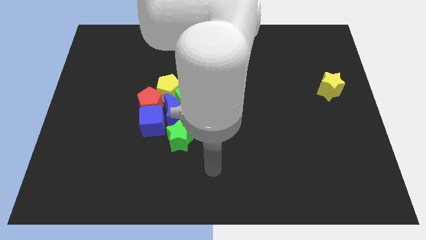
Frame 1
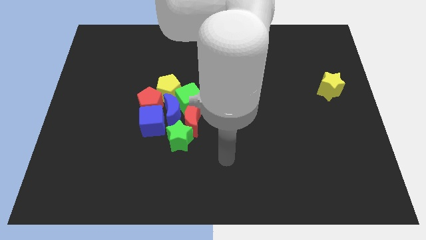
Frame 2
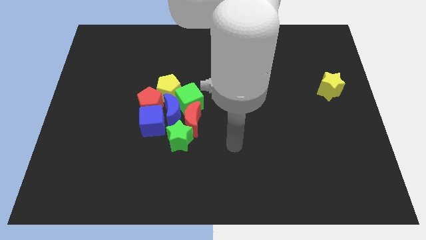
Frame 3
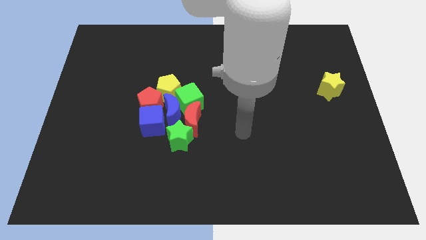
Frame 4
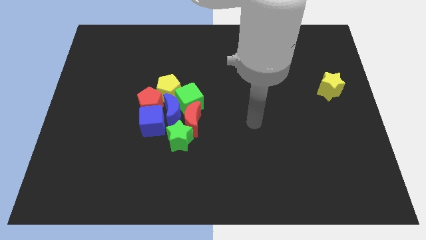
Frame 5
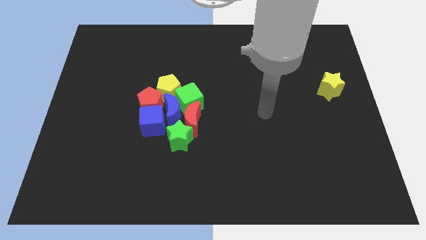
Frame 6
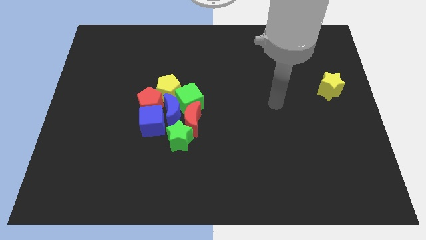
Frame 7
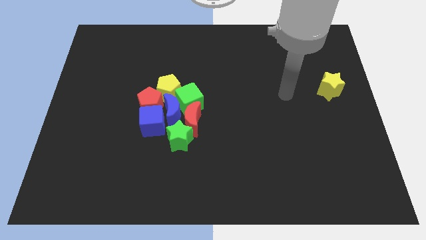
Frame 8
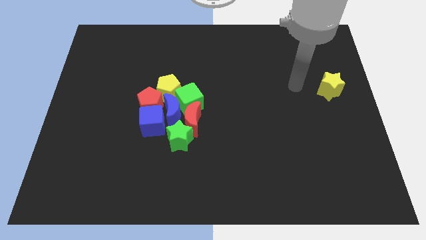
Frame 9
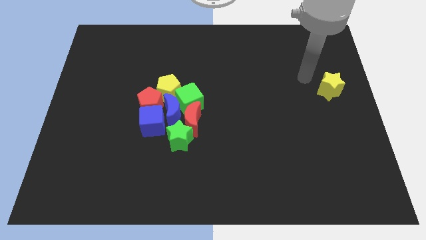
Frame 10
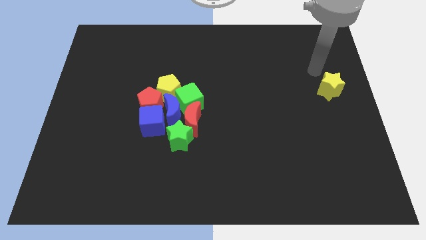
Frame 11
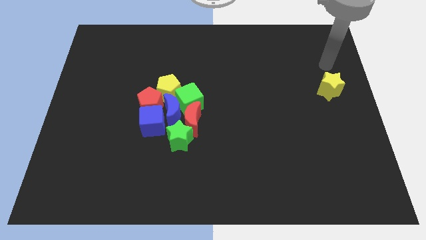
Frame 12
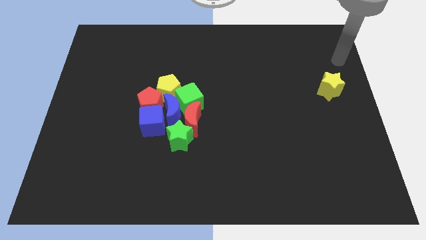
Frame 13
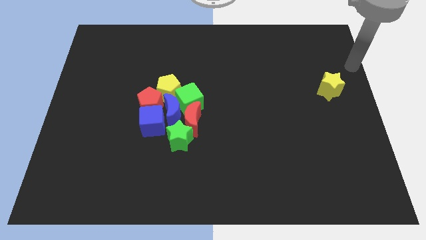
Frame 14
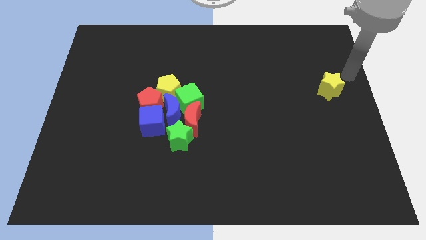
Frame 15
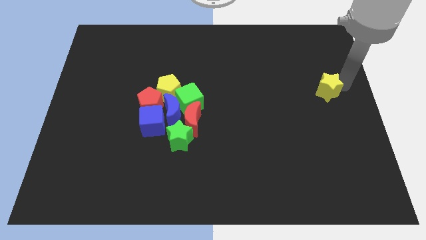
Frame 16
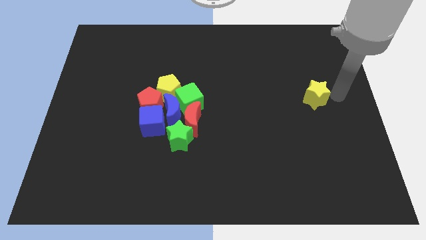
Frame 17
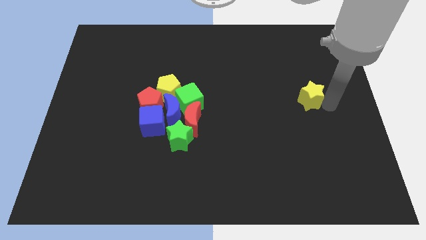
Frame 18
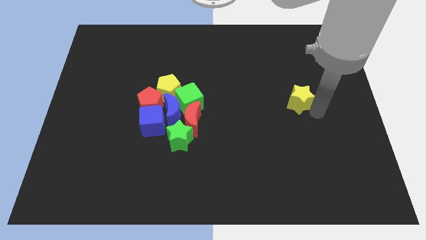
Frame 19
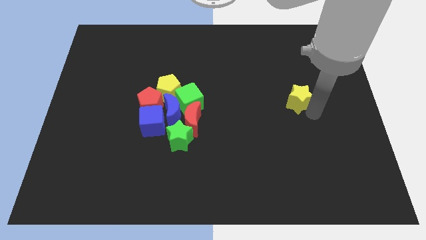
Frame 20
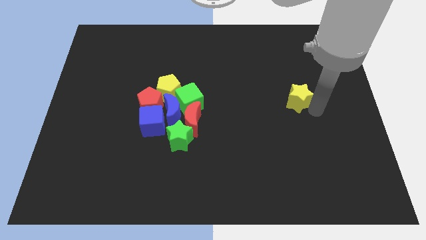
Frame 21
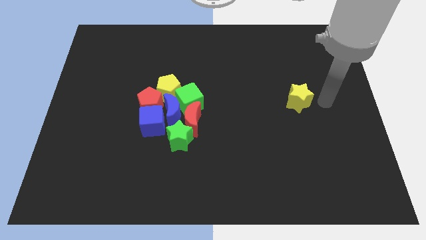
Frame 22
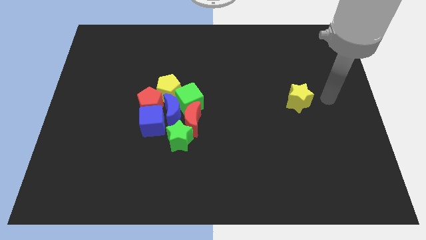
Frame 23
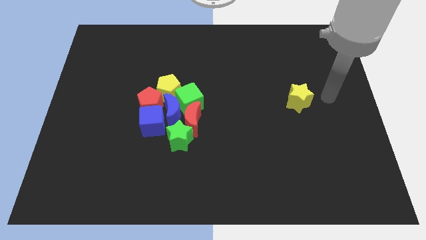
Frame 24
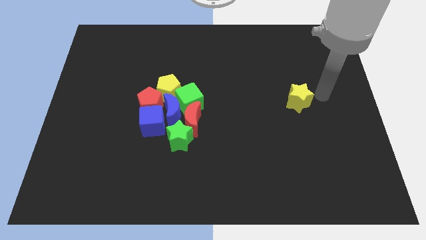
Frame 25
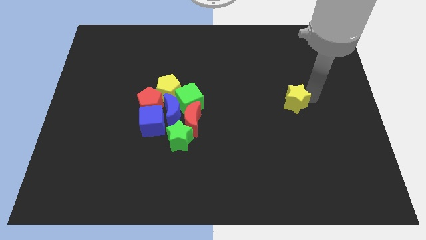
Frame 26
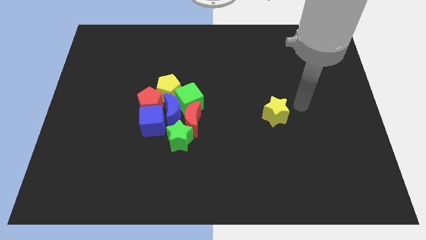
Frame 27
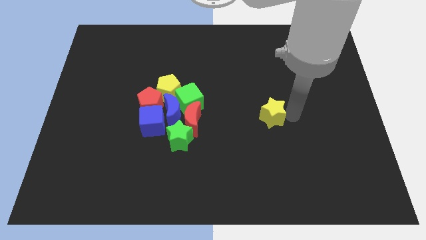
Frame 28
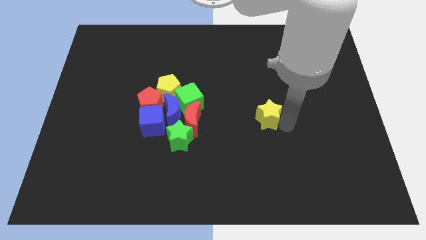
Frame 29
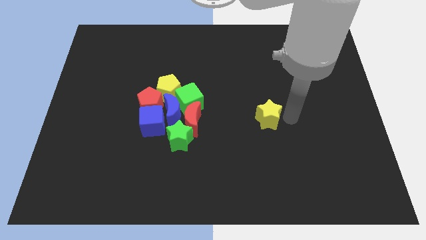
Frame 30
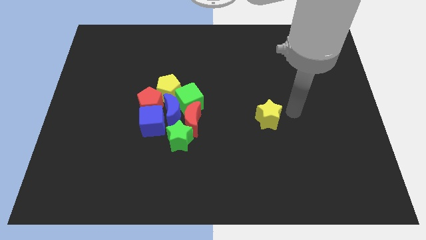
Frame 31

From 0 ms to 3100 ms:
push the yellow star towards bottom left

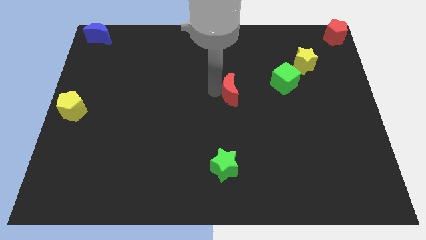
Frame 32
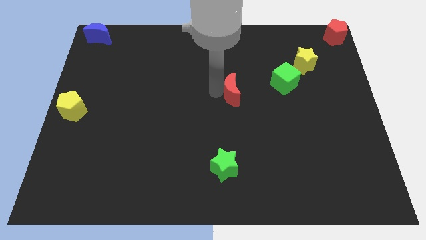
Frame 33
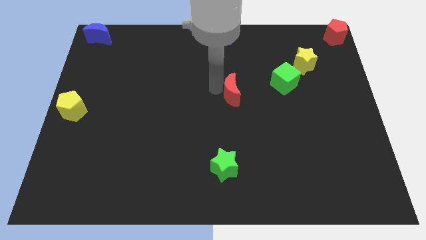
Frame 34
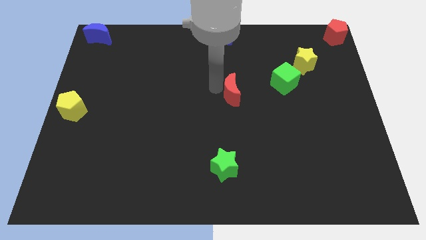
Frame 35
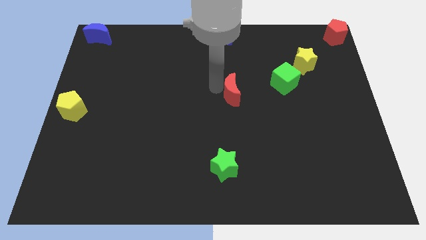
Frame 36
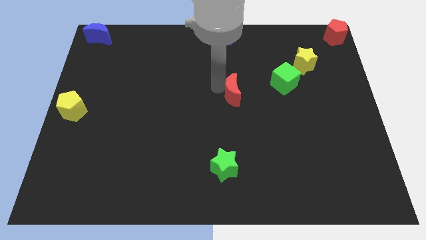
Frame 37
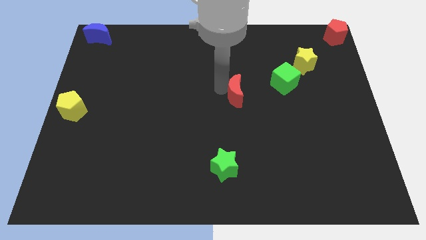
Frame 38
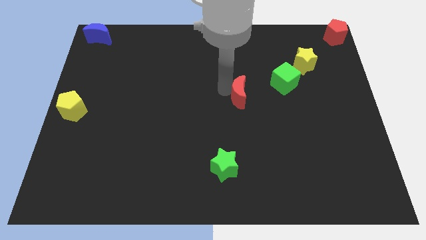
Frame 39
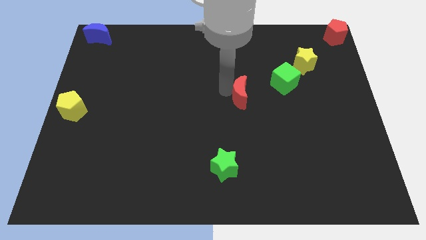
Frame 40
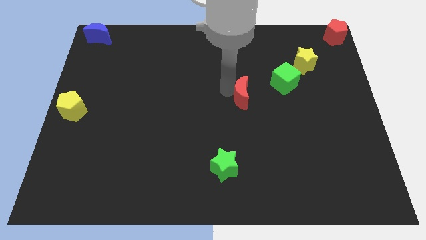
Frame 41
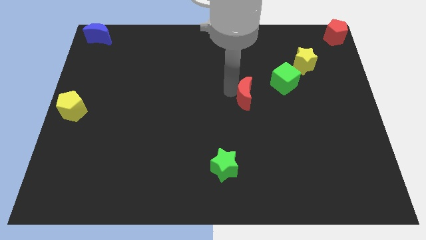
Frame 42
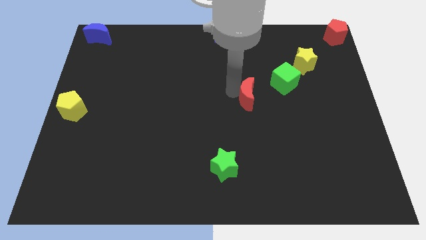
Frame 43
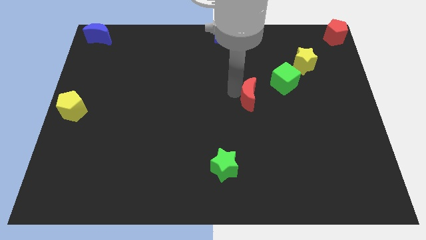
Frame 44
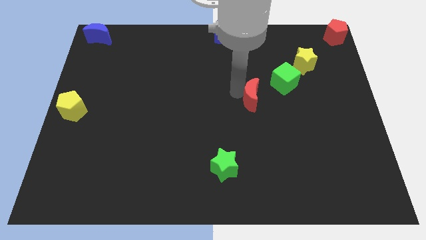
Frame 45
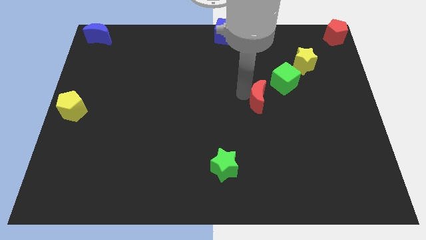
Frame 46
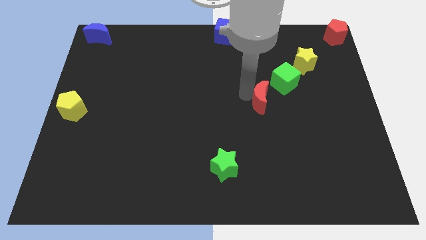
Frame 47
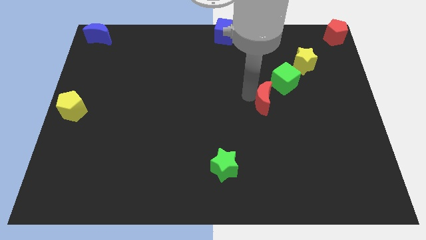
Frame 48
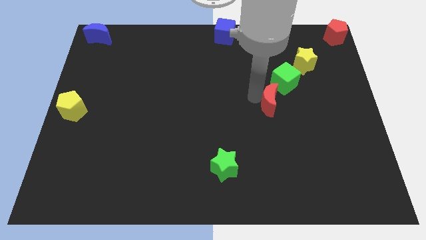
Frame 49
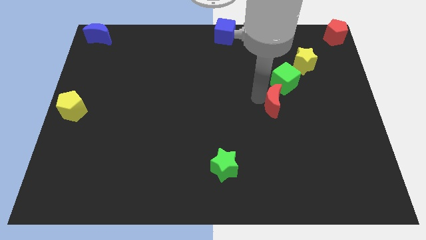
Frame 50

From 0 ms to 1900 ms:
slightly push the red moon towards the right center

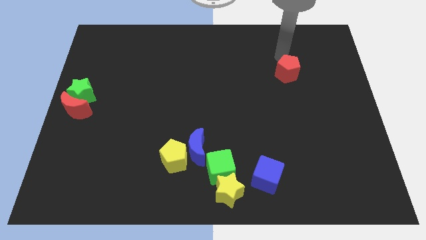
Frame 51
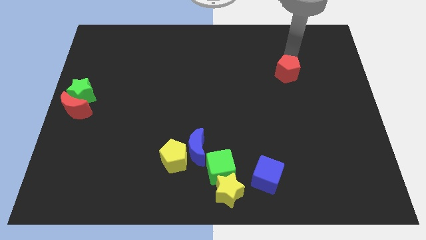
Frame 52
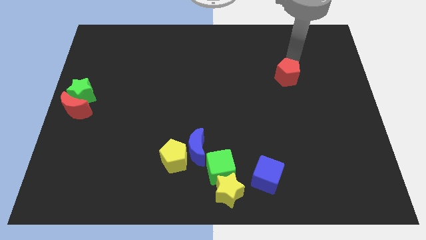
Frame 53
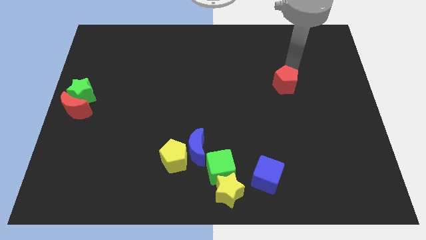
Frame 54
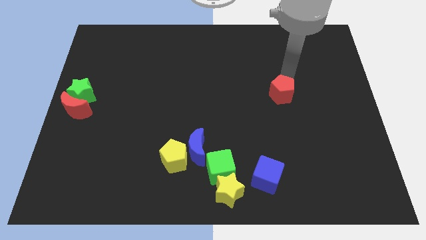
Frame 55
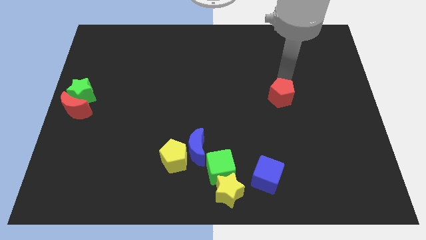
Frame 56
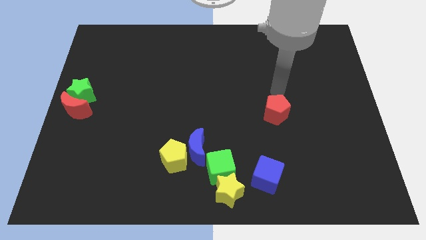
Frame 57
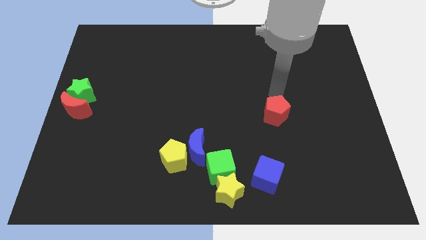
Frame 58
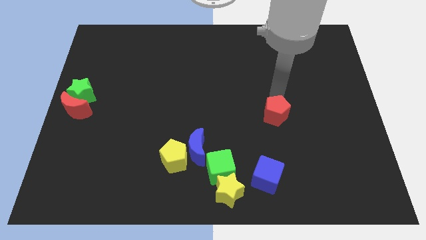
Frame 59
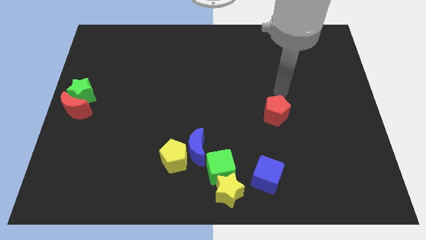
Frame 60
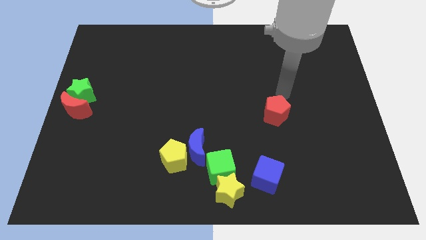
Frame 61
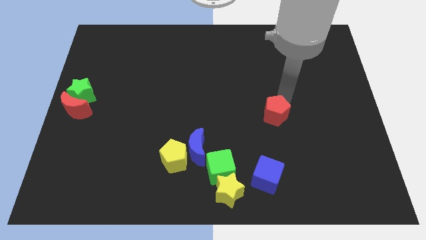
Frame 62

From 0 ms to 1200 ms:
push the red pentagon towards the blue cube

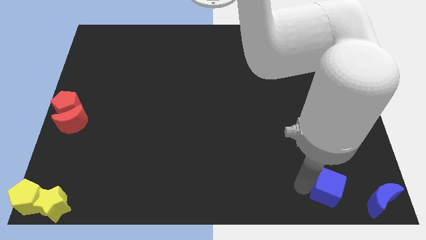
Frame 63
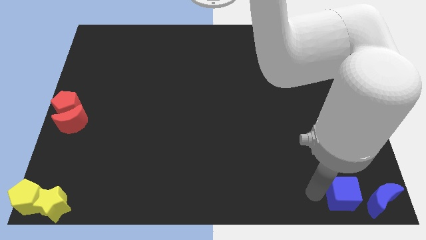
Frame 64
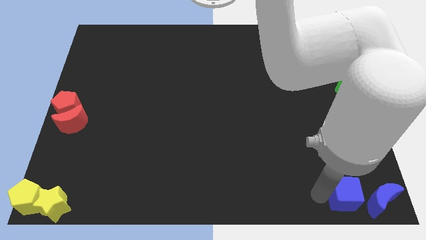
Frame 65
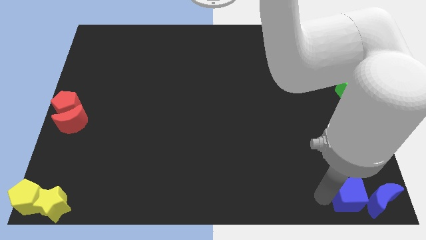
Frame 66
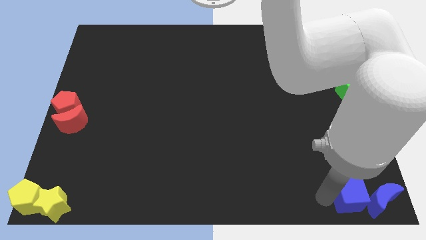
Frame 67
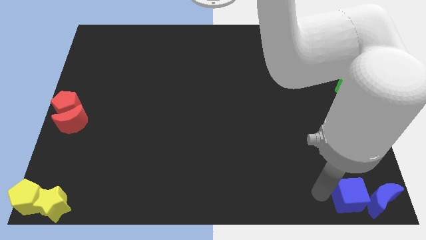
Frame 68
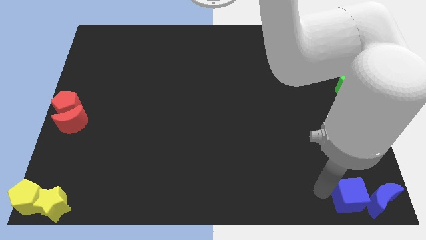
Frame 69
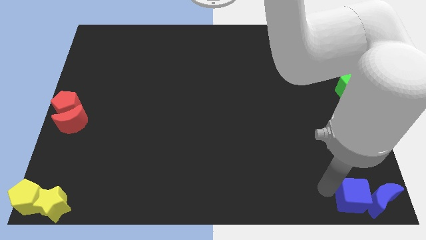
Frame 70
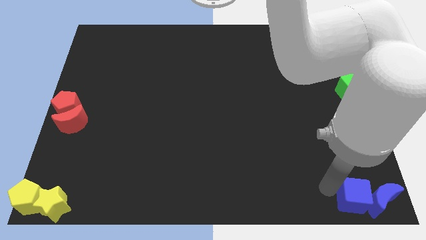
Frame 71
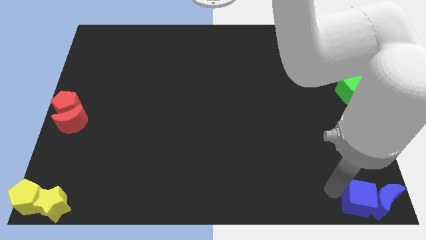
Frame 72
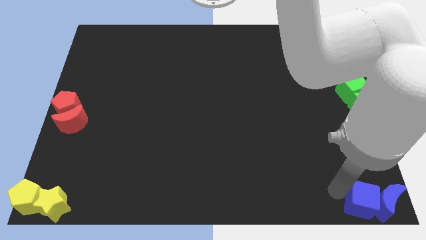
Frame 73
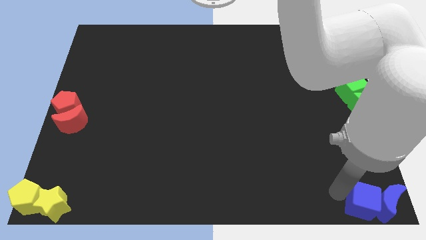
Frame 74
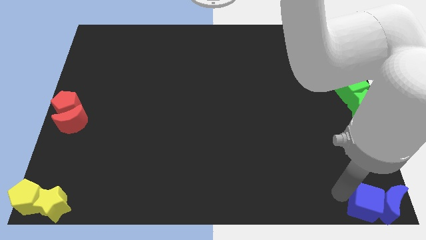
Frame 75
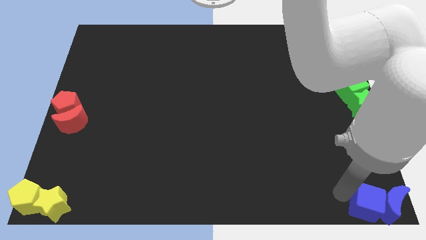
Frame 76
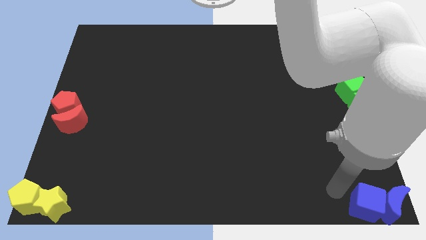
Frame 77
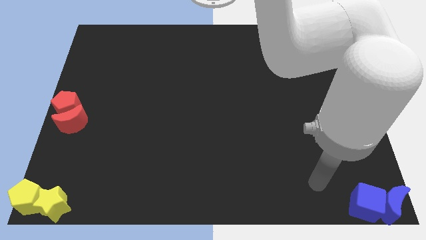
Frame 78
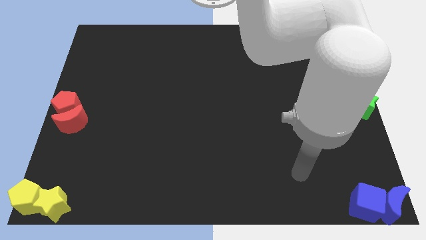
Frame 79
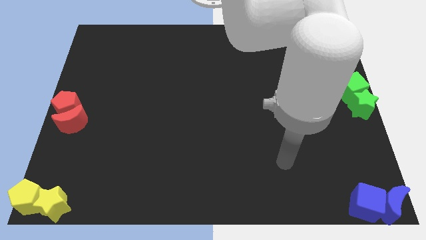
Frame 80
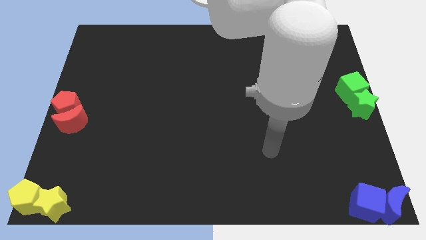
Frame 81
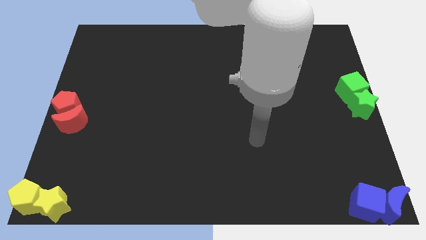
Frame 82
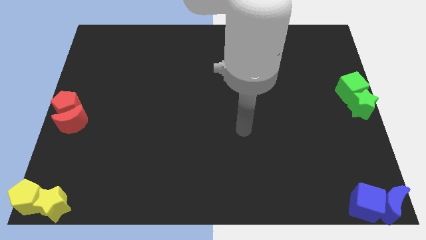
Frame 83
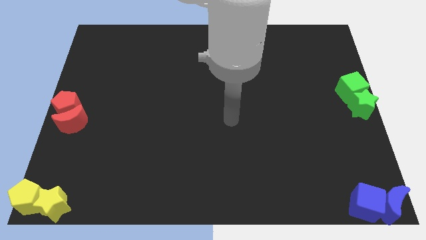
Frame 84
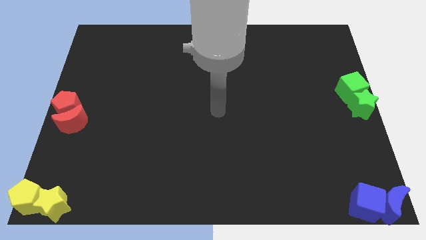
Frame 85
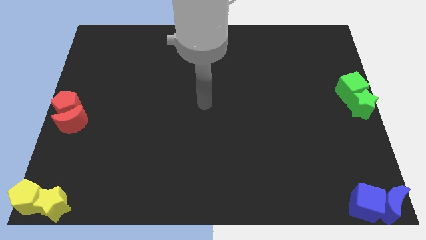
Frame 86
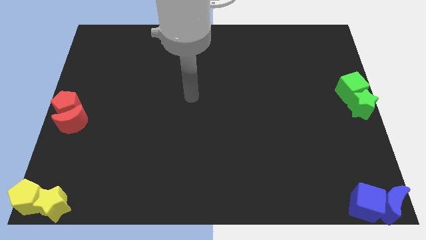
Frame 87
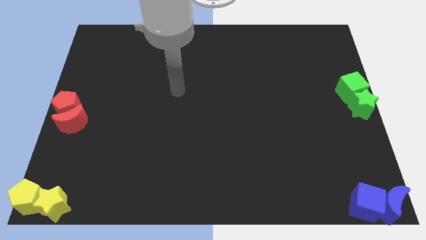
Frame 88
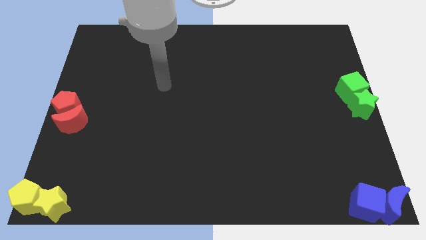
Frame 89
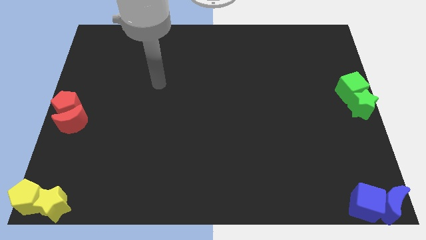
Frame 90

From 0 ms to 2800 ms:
move the blue cube to the left side of the blue crescent
